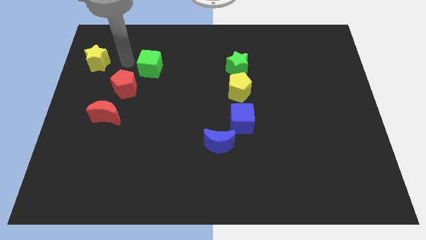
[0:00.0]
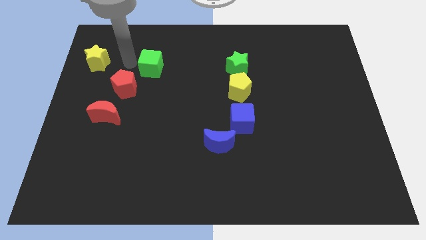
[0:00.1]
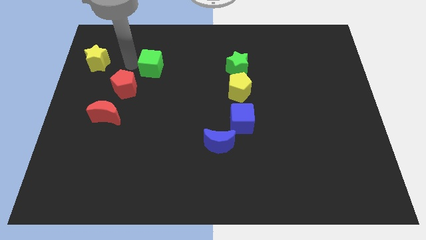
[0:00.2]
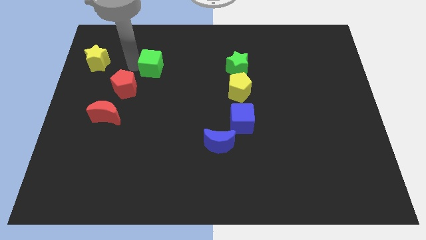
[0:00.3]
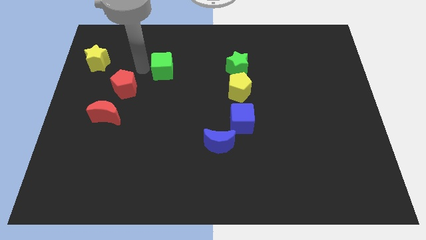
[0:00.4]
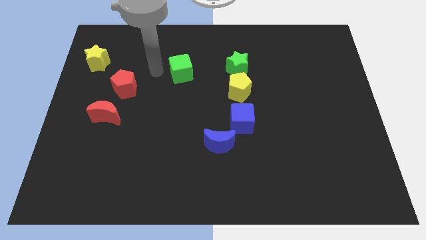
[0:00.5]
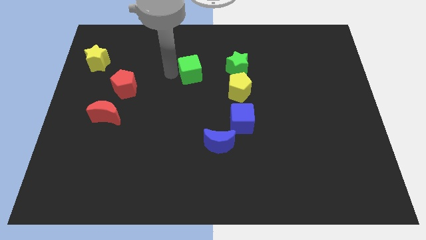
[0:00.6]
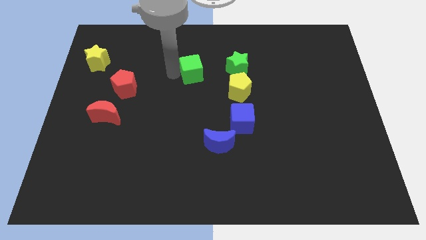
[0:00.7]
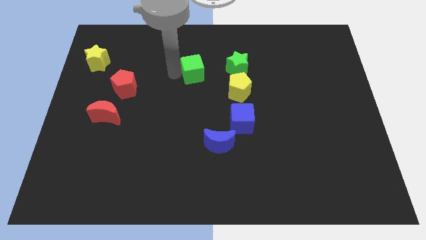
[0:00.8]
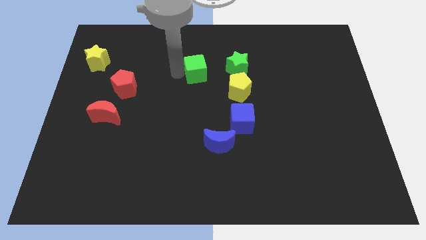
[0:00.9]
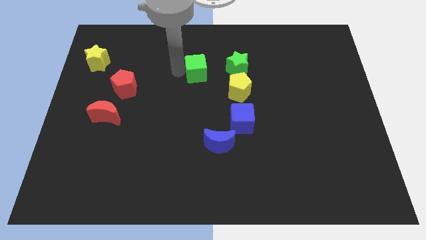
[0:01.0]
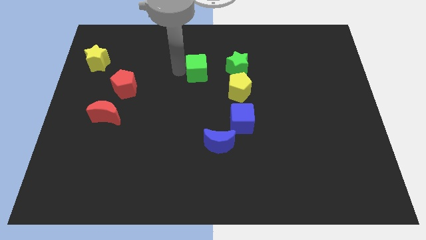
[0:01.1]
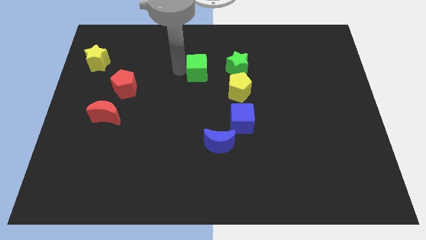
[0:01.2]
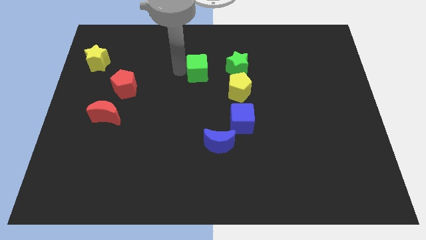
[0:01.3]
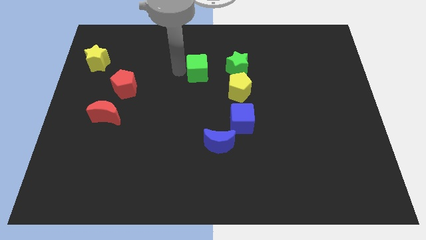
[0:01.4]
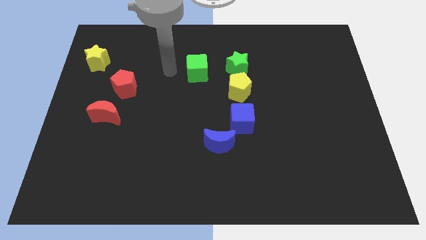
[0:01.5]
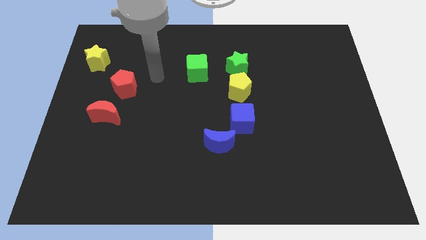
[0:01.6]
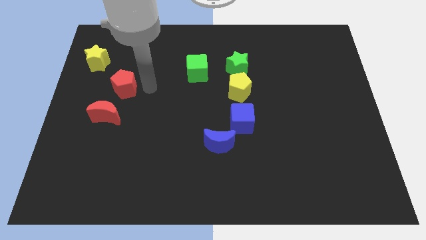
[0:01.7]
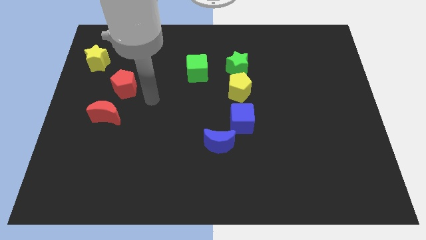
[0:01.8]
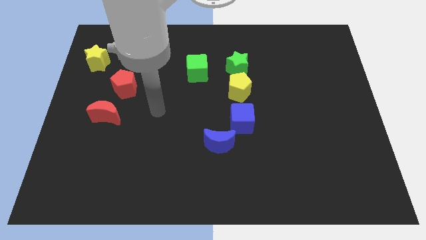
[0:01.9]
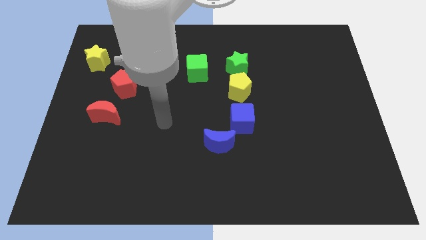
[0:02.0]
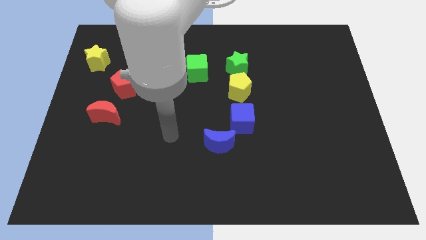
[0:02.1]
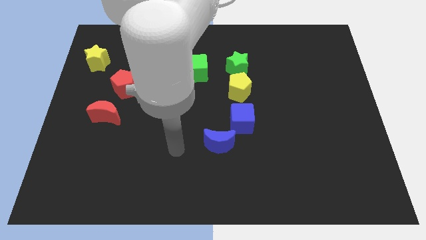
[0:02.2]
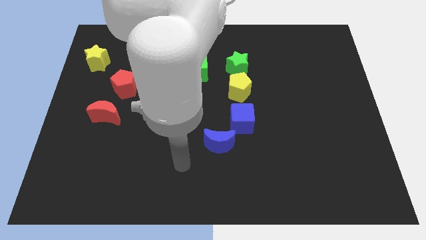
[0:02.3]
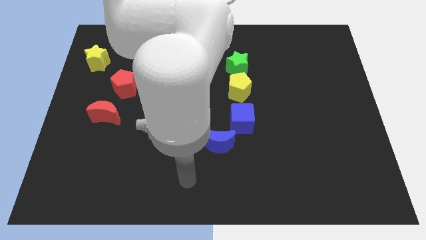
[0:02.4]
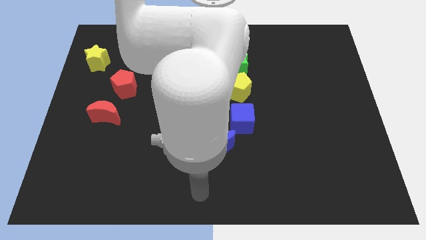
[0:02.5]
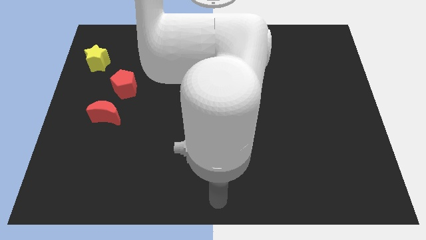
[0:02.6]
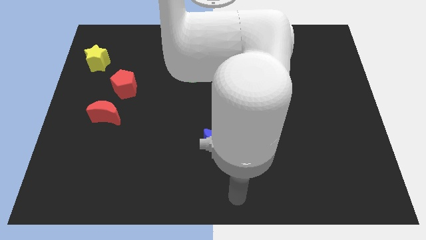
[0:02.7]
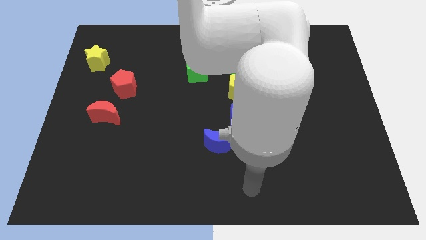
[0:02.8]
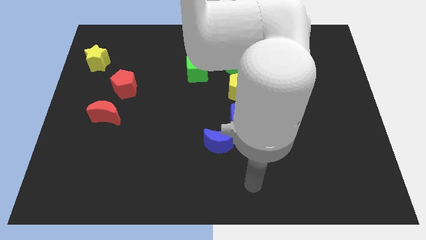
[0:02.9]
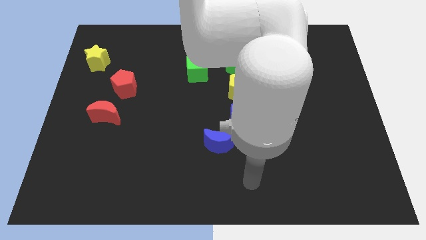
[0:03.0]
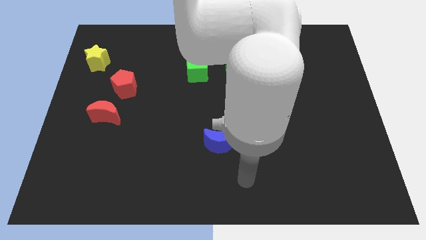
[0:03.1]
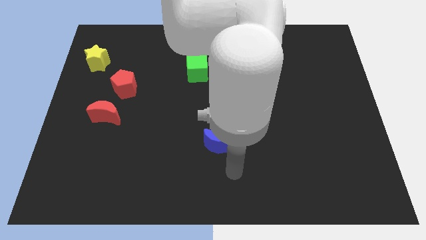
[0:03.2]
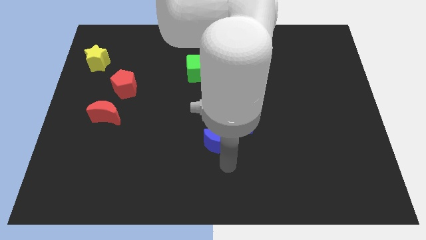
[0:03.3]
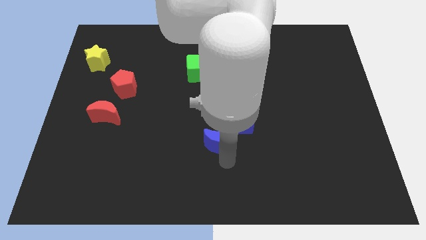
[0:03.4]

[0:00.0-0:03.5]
push the green cube left to the green star

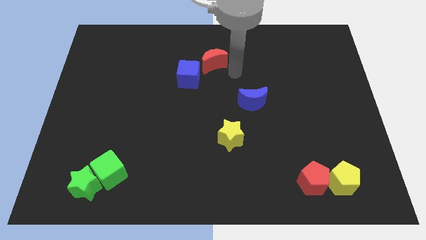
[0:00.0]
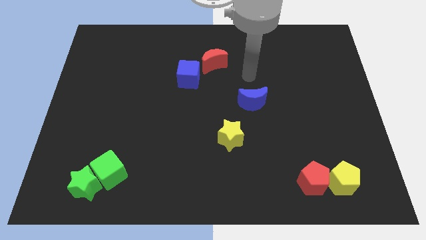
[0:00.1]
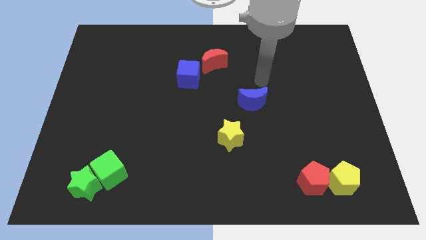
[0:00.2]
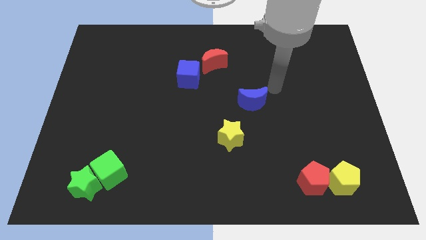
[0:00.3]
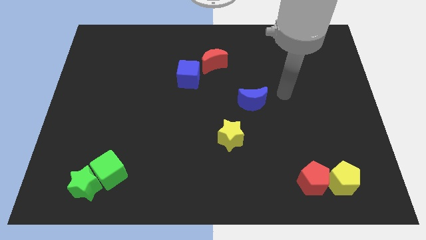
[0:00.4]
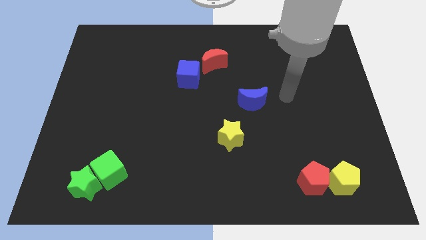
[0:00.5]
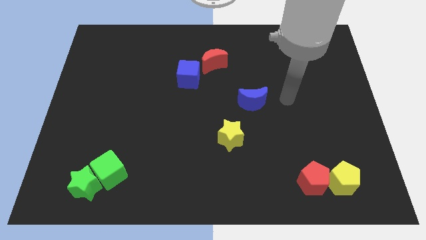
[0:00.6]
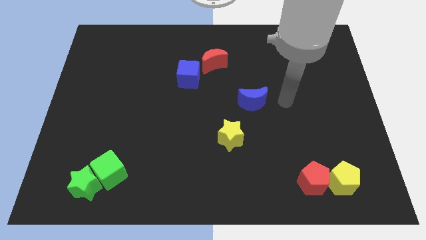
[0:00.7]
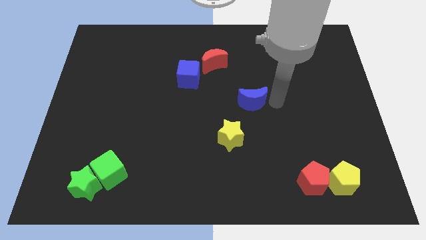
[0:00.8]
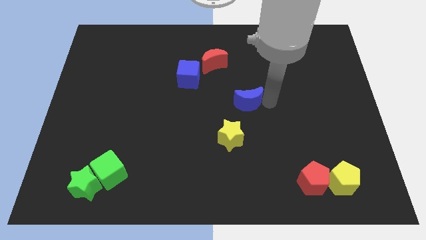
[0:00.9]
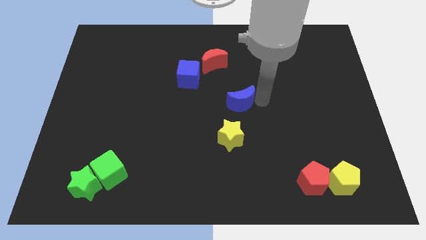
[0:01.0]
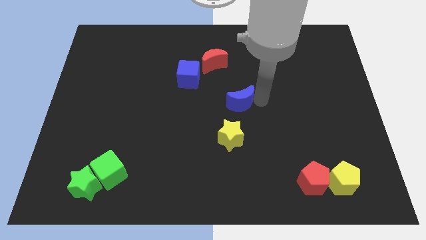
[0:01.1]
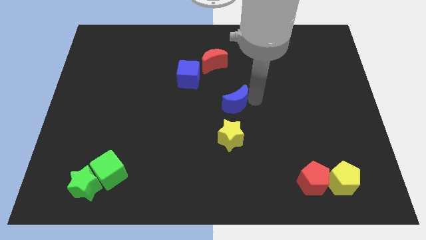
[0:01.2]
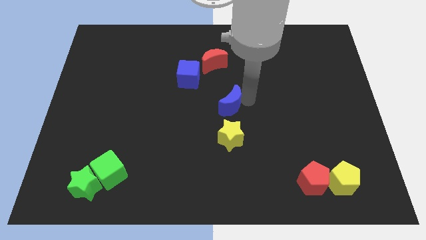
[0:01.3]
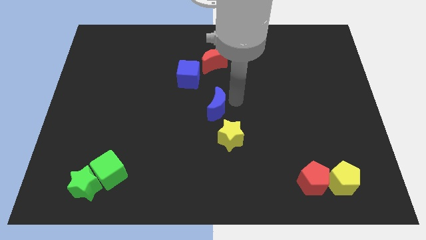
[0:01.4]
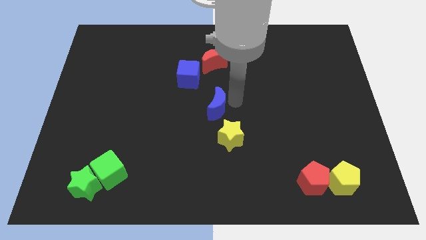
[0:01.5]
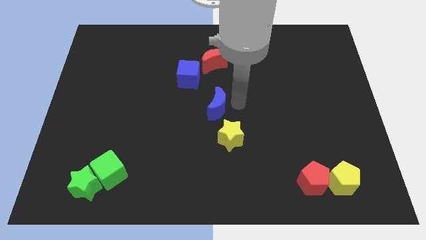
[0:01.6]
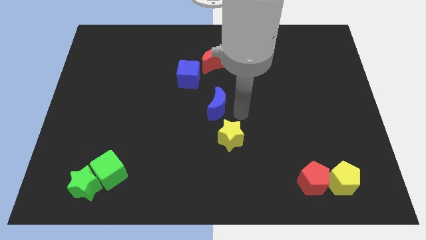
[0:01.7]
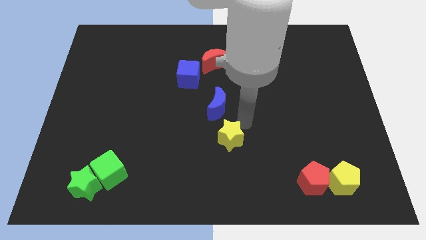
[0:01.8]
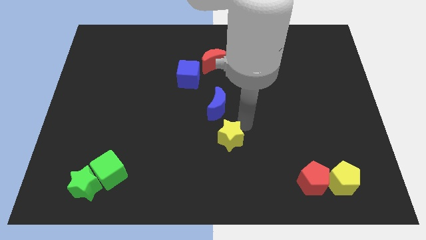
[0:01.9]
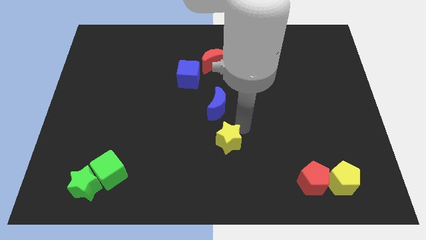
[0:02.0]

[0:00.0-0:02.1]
push the blue crescent close to the blue cube

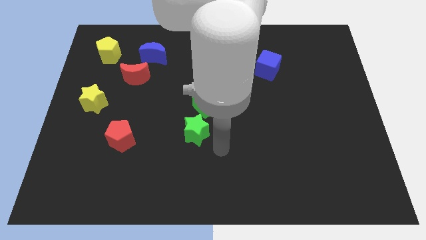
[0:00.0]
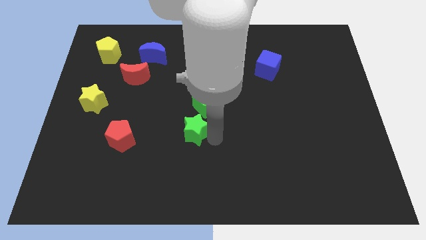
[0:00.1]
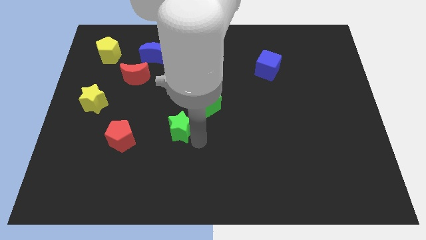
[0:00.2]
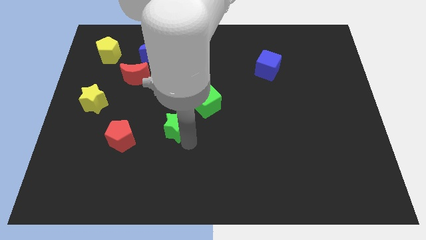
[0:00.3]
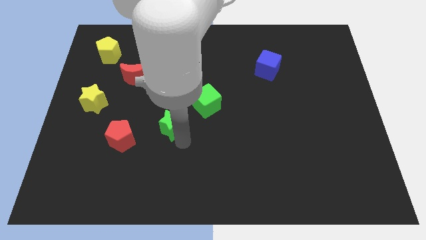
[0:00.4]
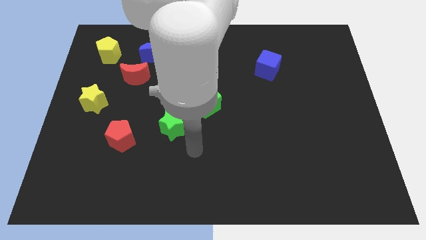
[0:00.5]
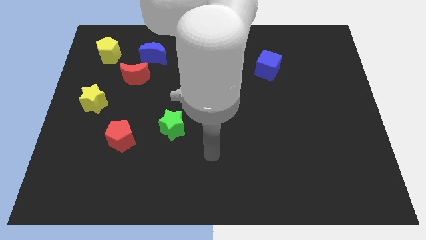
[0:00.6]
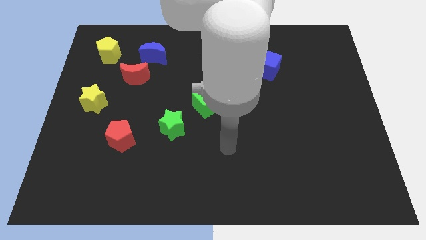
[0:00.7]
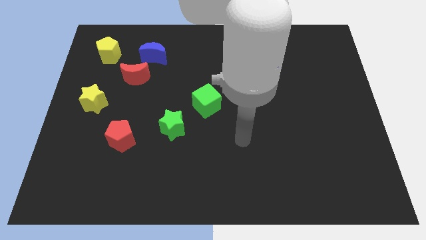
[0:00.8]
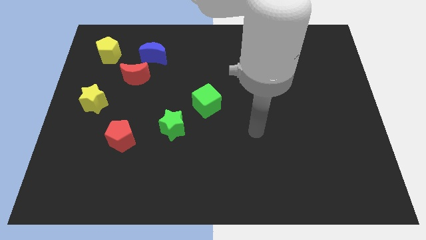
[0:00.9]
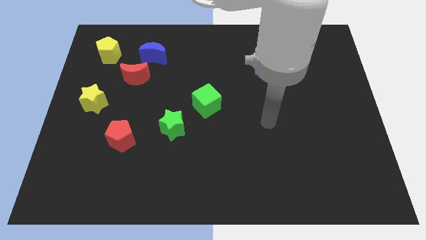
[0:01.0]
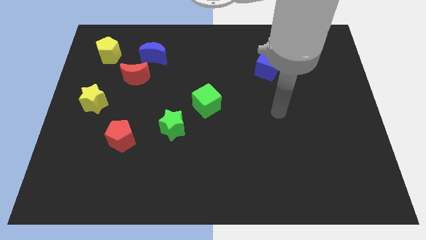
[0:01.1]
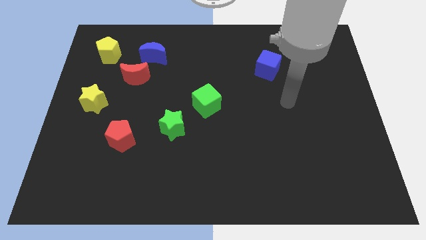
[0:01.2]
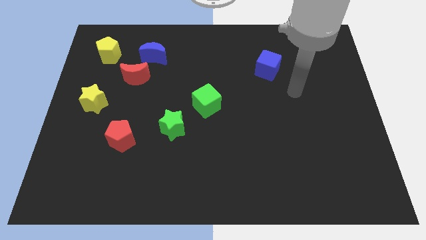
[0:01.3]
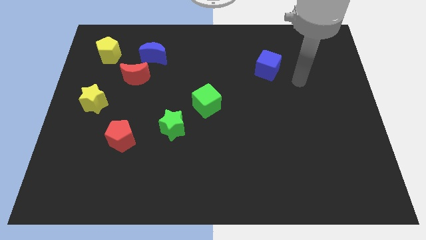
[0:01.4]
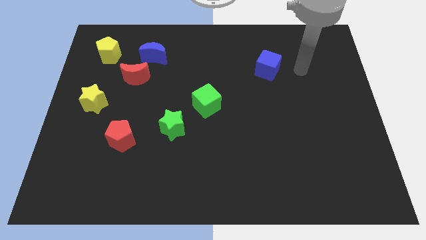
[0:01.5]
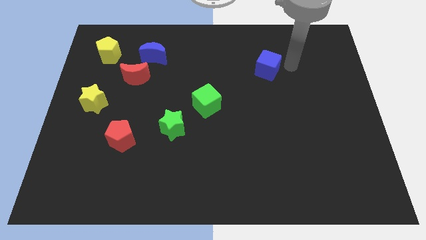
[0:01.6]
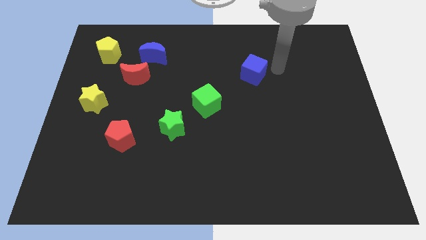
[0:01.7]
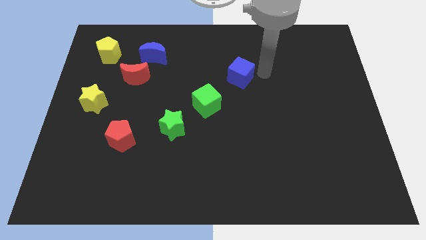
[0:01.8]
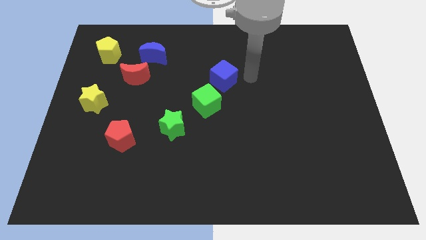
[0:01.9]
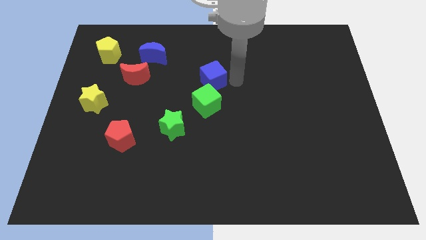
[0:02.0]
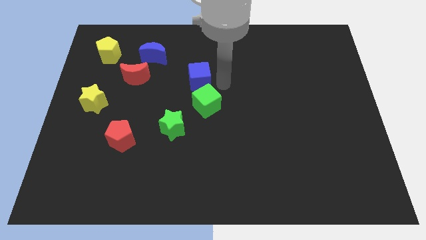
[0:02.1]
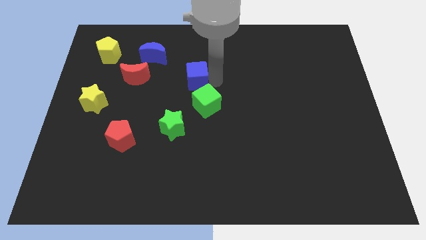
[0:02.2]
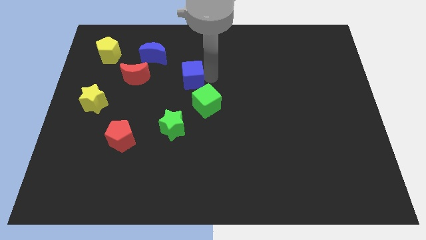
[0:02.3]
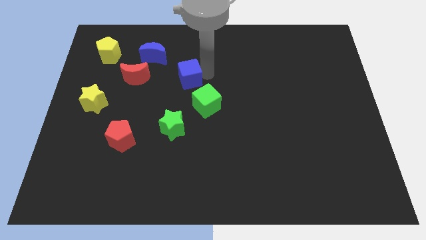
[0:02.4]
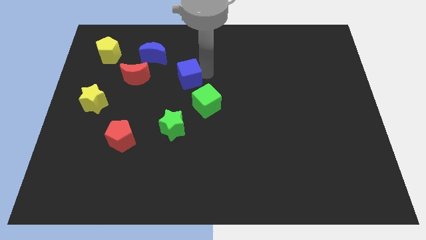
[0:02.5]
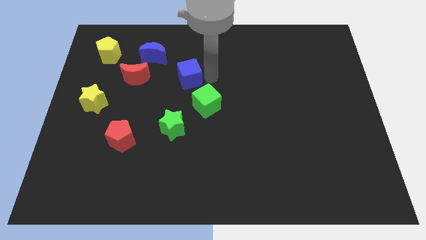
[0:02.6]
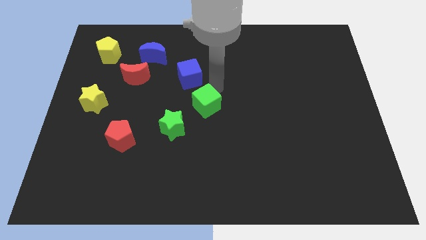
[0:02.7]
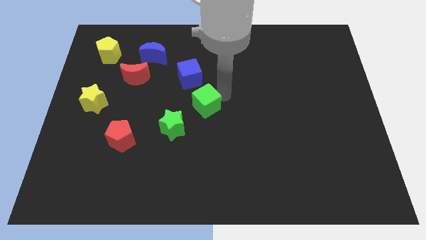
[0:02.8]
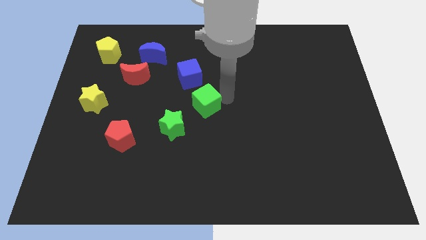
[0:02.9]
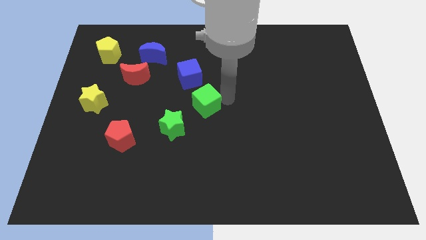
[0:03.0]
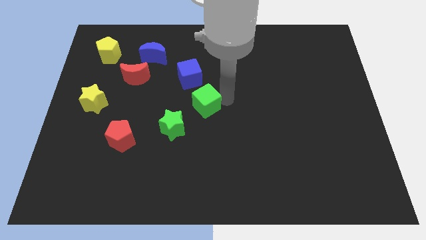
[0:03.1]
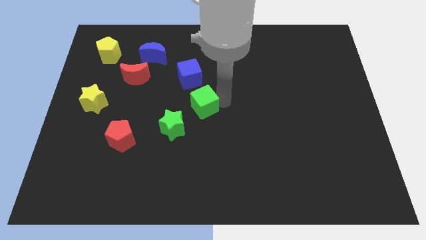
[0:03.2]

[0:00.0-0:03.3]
place the blue cube to the right of the red moon
